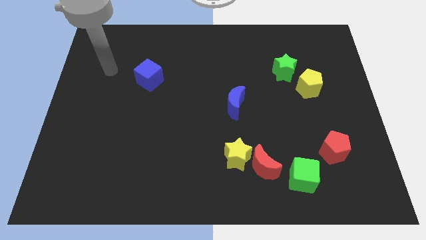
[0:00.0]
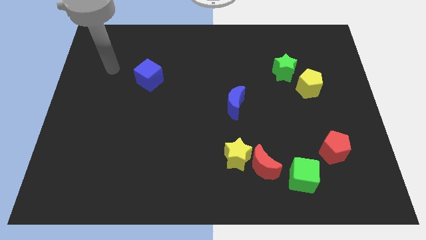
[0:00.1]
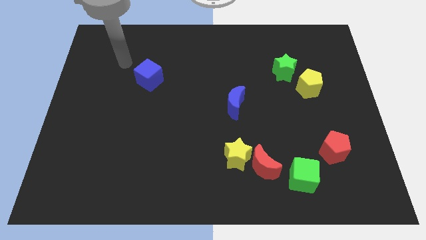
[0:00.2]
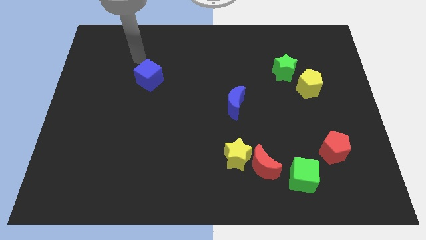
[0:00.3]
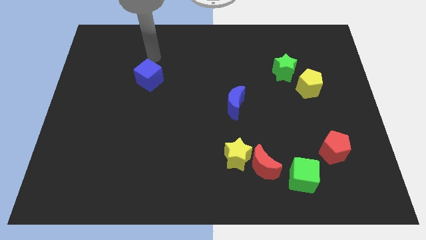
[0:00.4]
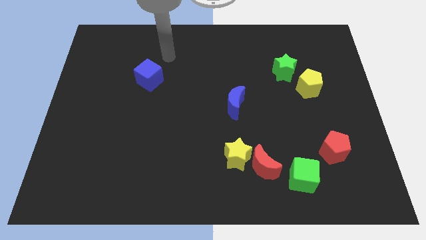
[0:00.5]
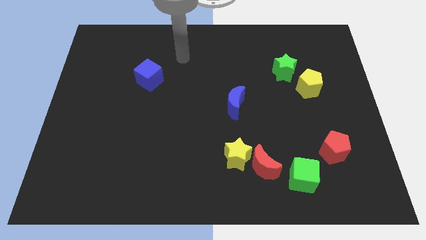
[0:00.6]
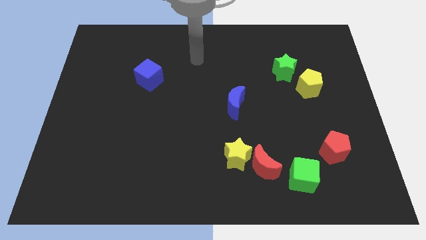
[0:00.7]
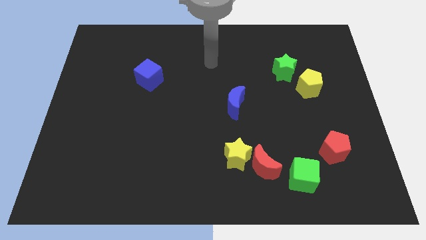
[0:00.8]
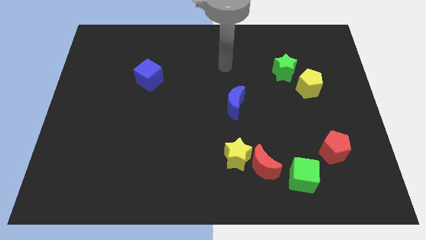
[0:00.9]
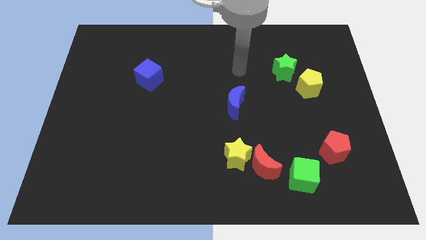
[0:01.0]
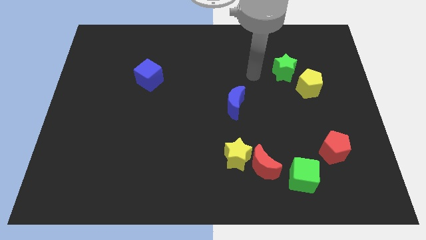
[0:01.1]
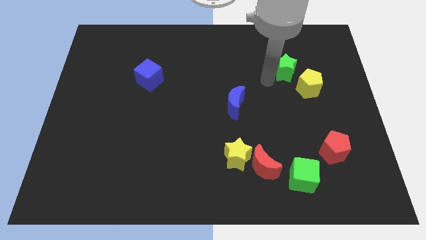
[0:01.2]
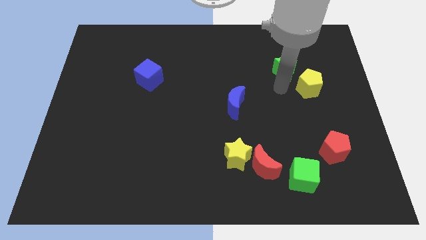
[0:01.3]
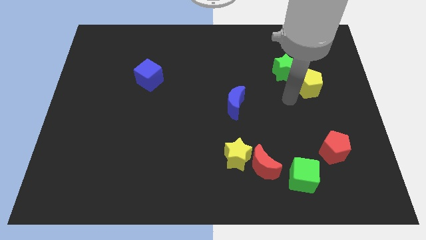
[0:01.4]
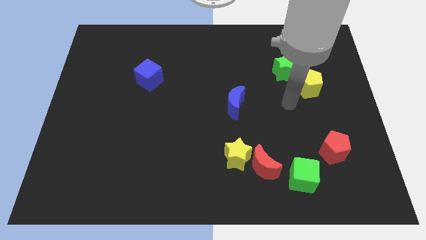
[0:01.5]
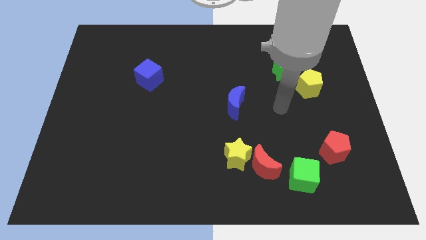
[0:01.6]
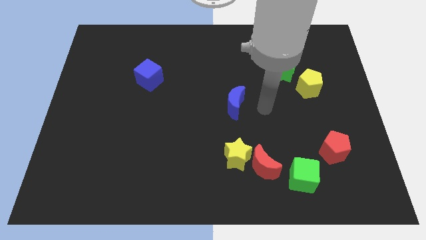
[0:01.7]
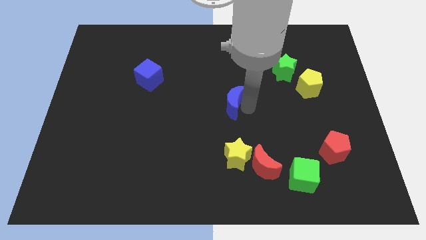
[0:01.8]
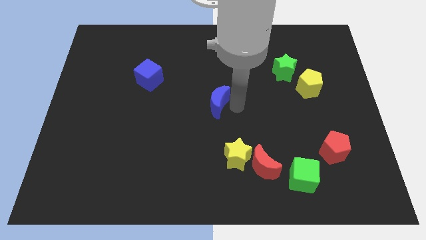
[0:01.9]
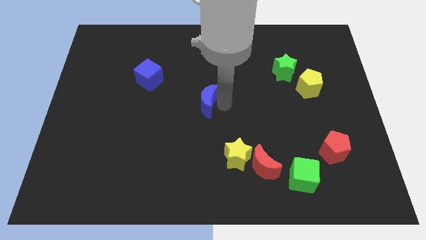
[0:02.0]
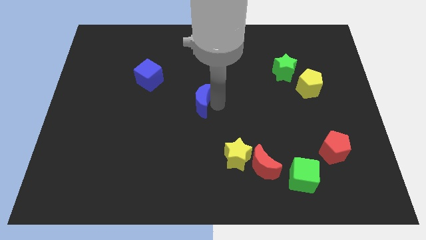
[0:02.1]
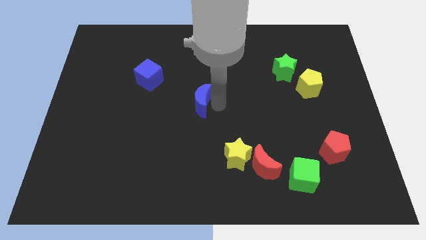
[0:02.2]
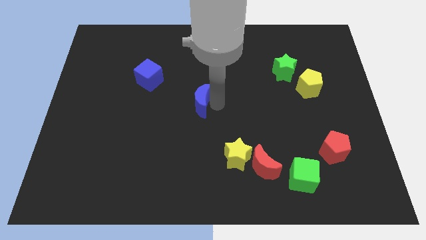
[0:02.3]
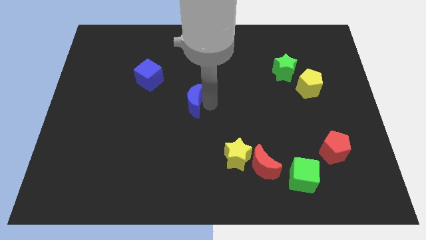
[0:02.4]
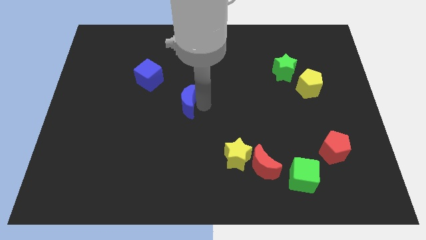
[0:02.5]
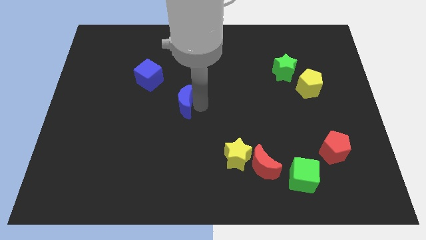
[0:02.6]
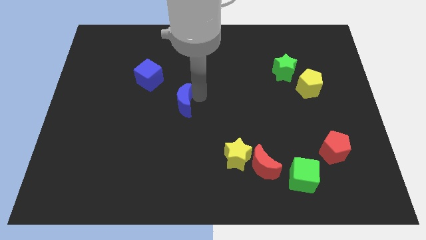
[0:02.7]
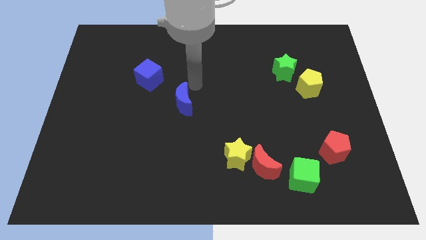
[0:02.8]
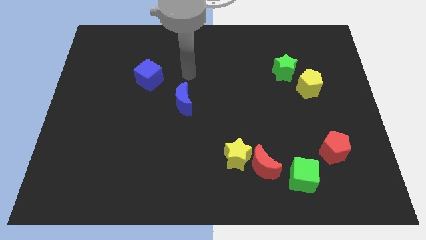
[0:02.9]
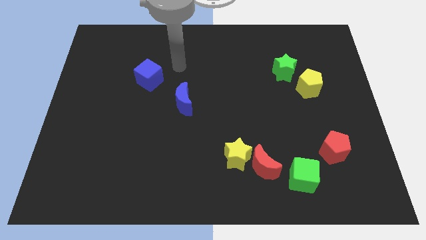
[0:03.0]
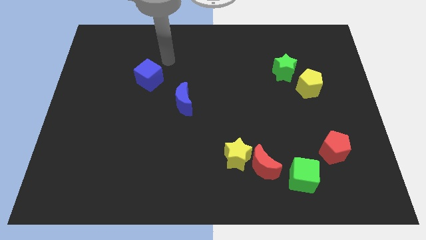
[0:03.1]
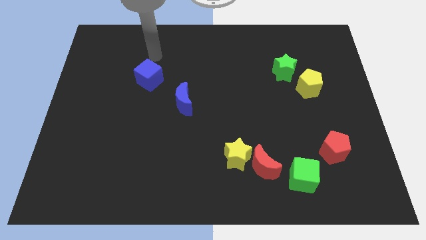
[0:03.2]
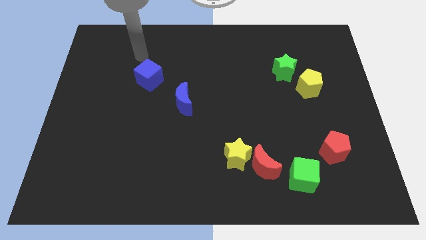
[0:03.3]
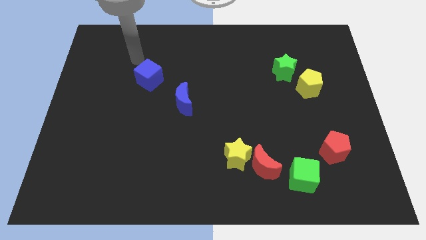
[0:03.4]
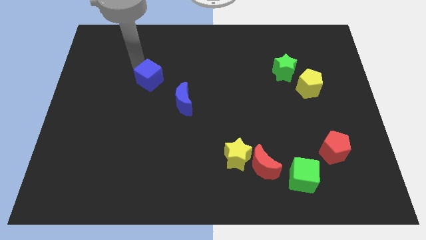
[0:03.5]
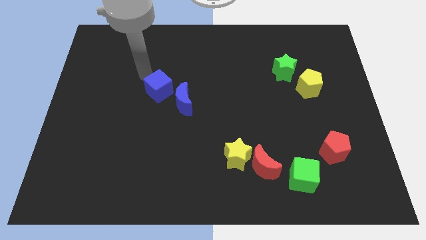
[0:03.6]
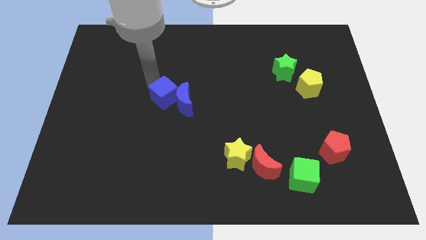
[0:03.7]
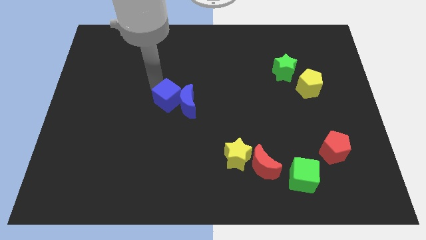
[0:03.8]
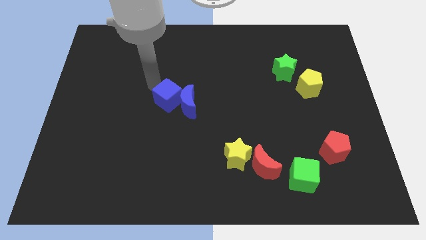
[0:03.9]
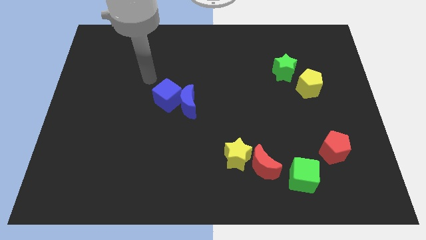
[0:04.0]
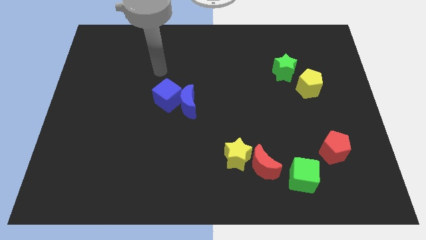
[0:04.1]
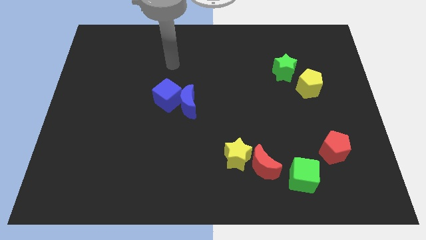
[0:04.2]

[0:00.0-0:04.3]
move the blue cube to the left side of the blue moon

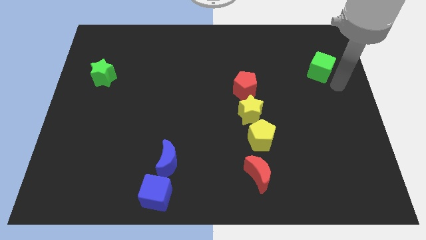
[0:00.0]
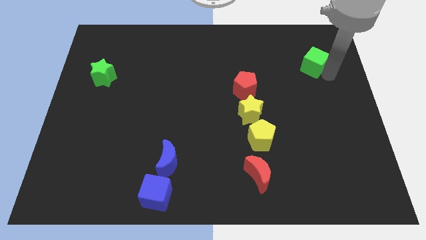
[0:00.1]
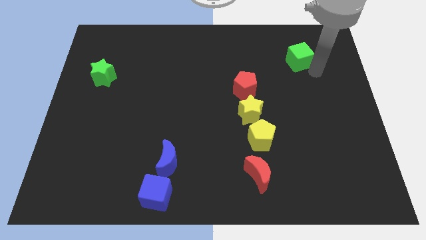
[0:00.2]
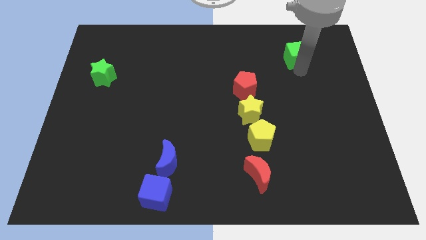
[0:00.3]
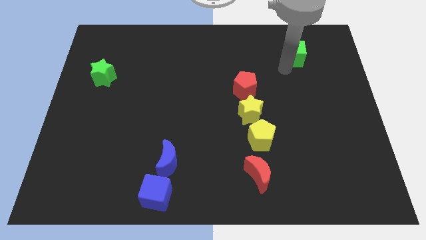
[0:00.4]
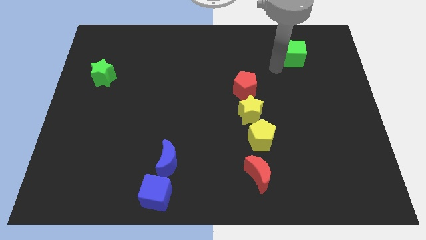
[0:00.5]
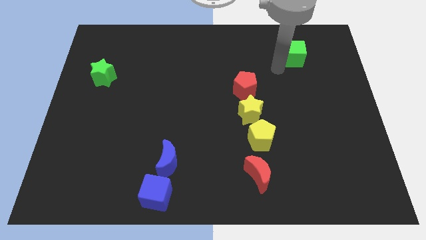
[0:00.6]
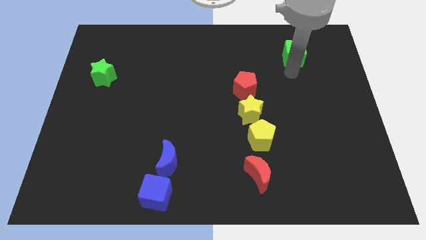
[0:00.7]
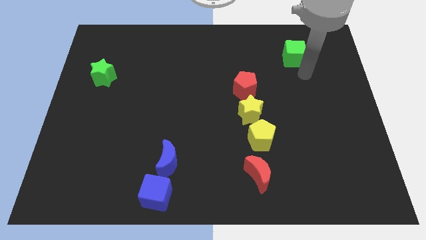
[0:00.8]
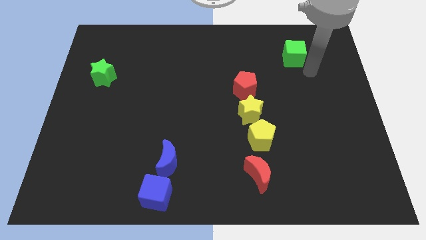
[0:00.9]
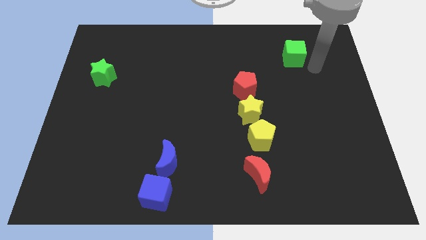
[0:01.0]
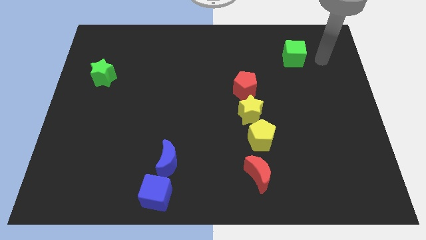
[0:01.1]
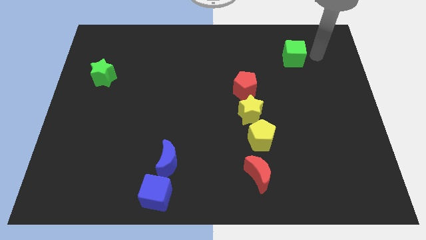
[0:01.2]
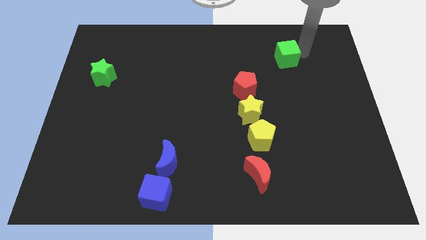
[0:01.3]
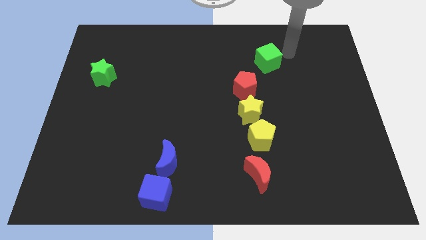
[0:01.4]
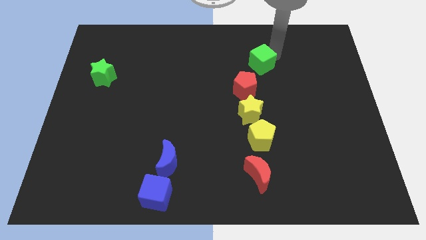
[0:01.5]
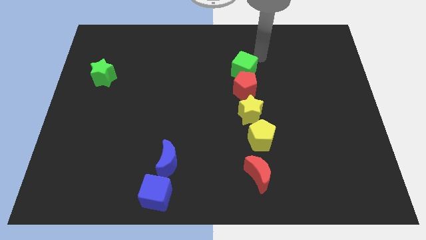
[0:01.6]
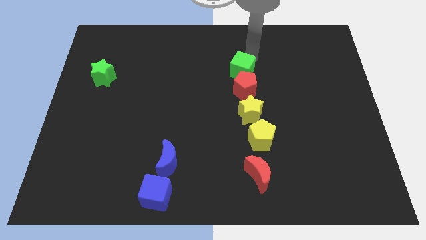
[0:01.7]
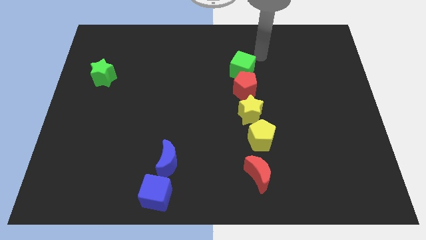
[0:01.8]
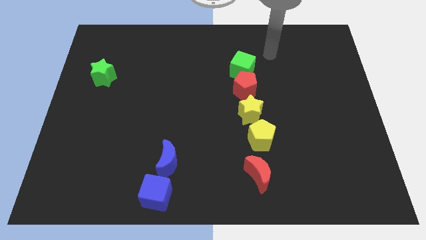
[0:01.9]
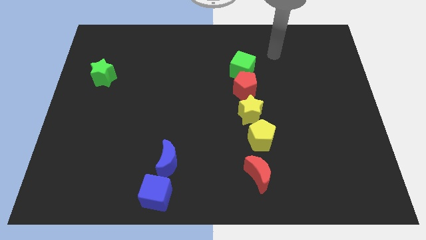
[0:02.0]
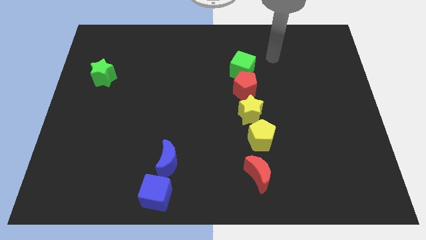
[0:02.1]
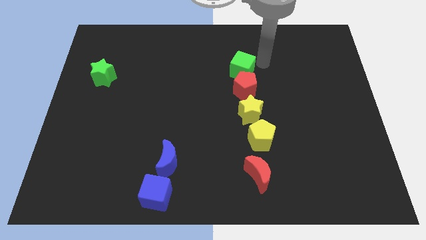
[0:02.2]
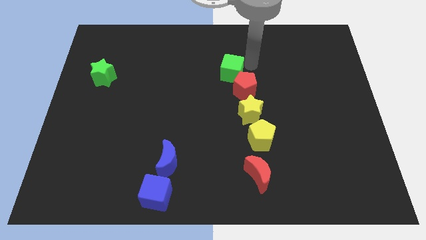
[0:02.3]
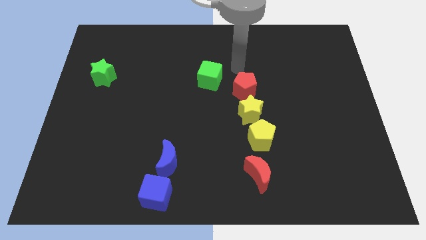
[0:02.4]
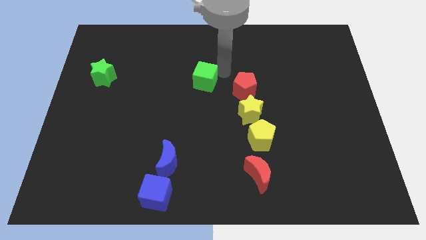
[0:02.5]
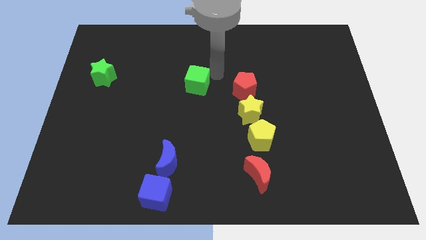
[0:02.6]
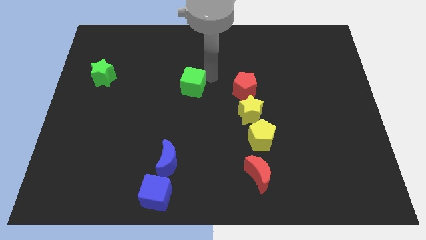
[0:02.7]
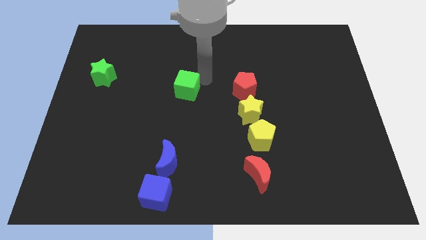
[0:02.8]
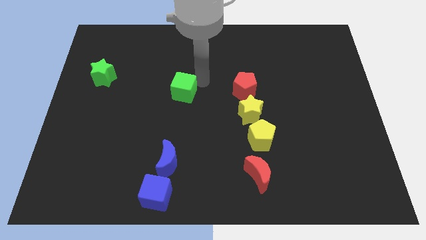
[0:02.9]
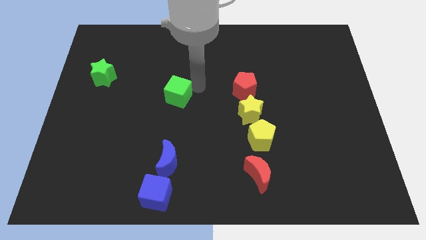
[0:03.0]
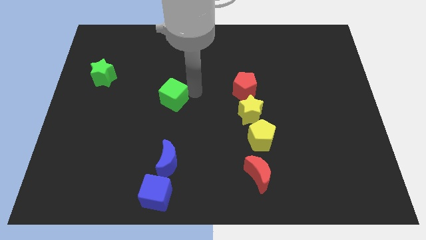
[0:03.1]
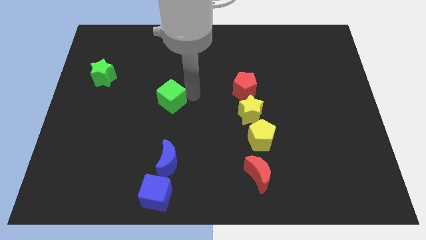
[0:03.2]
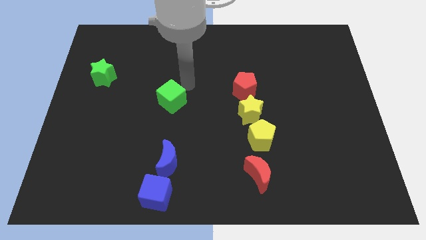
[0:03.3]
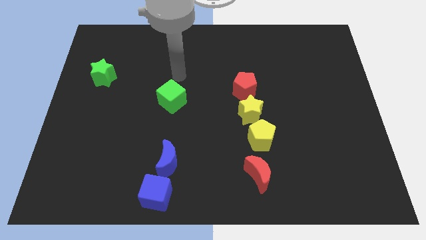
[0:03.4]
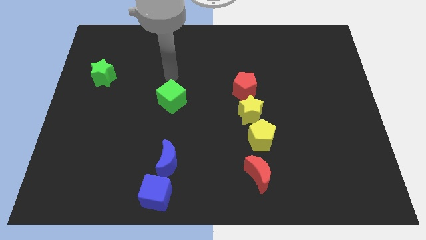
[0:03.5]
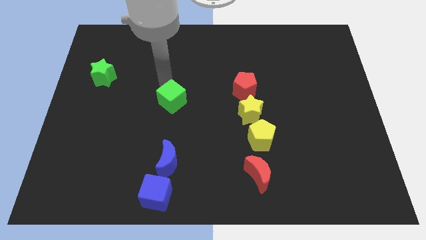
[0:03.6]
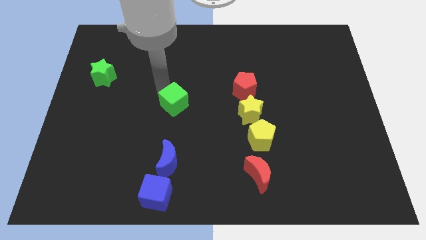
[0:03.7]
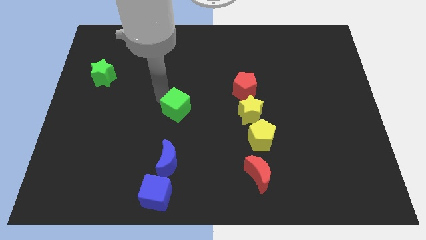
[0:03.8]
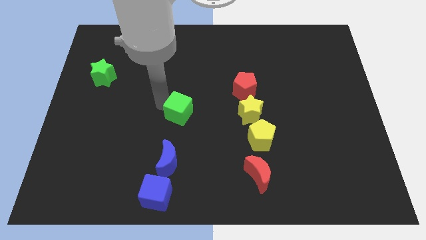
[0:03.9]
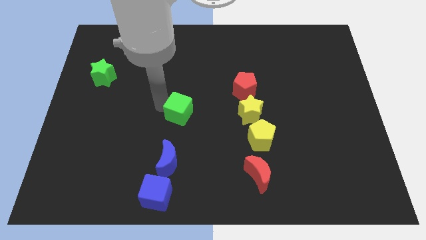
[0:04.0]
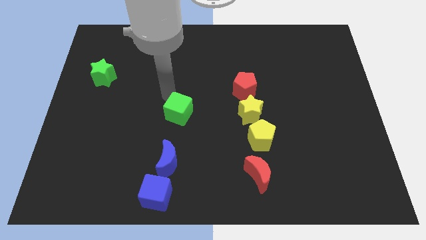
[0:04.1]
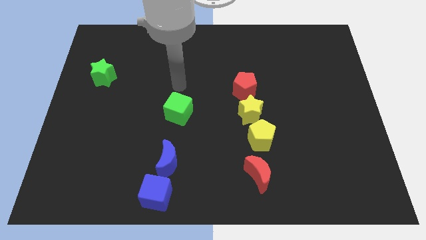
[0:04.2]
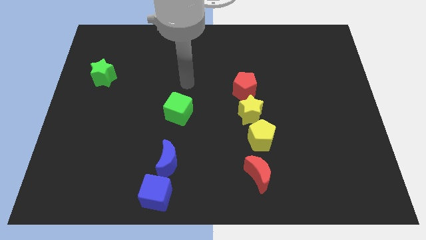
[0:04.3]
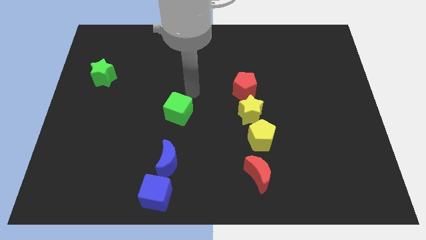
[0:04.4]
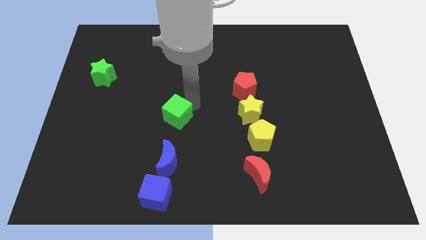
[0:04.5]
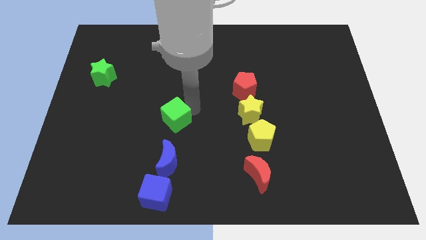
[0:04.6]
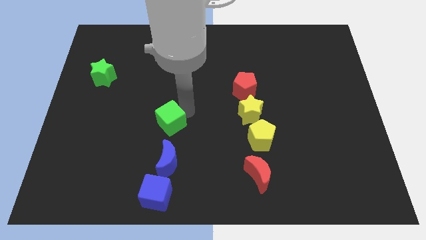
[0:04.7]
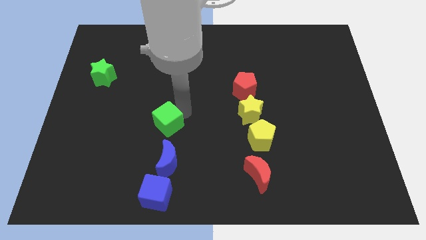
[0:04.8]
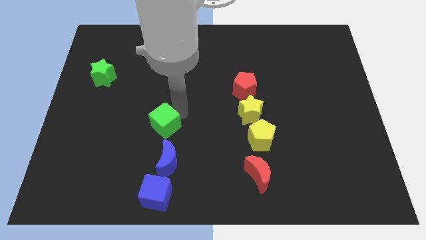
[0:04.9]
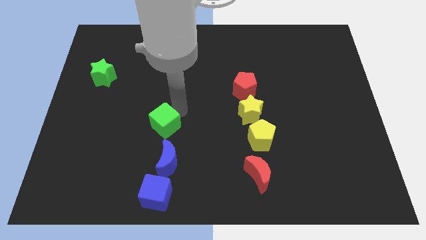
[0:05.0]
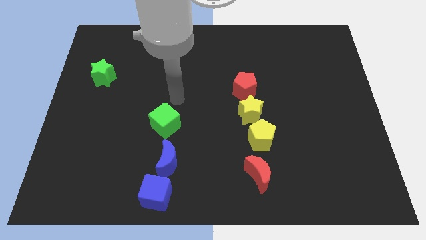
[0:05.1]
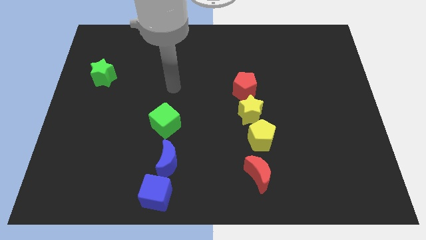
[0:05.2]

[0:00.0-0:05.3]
push the green cube to the top of blue crescent
